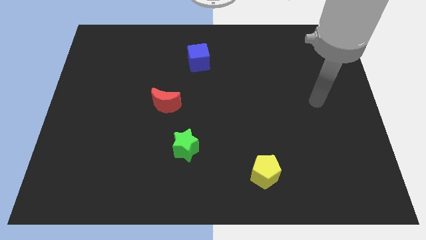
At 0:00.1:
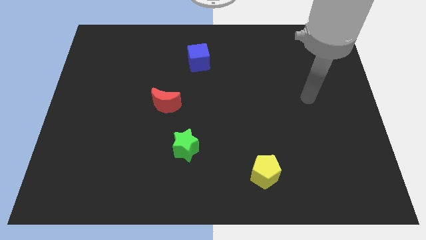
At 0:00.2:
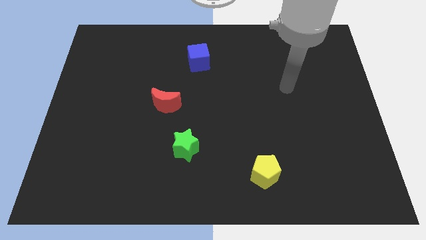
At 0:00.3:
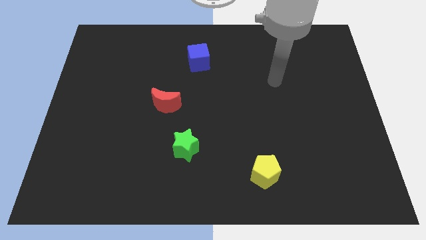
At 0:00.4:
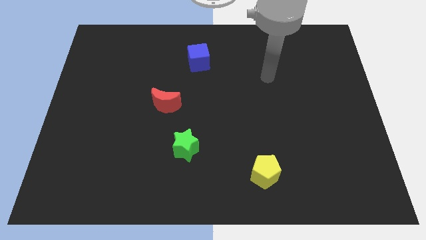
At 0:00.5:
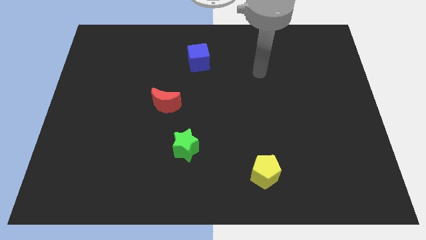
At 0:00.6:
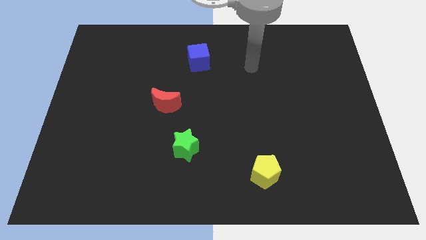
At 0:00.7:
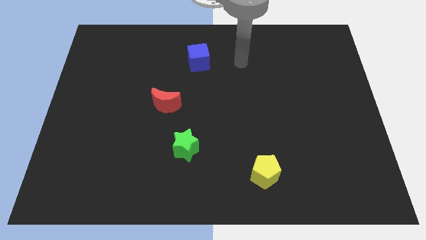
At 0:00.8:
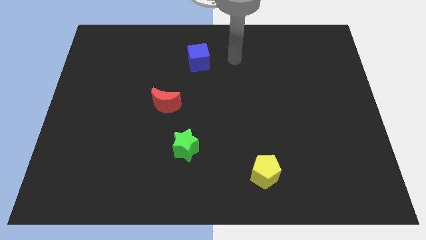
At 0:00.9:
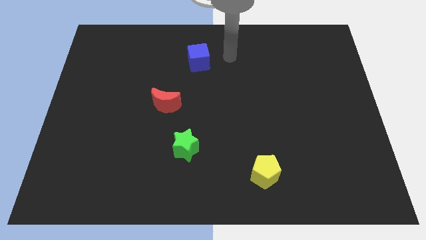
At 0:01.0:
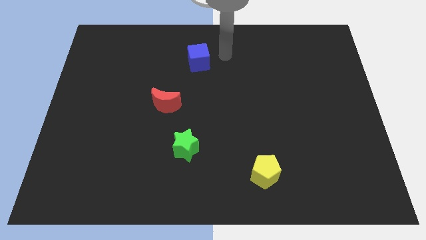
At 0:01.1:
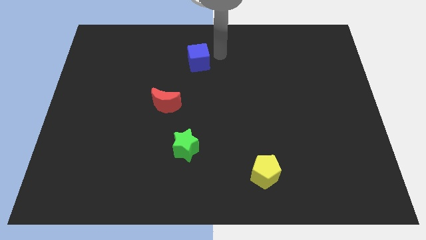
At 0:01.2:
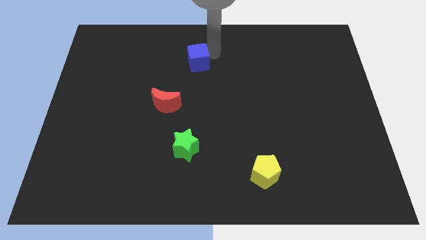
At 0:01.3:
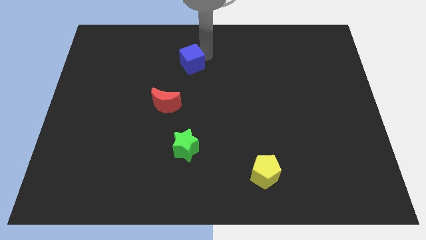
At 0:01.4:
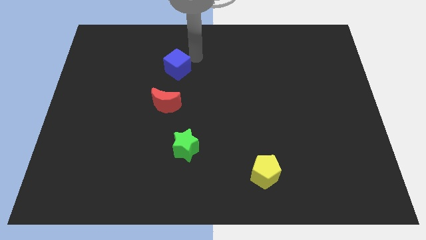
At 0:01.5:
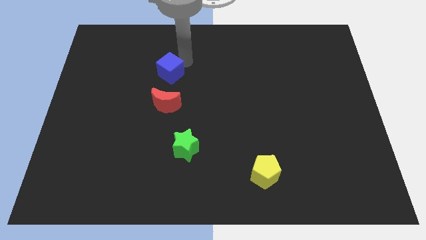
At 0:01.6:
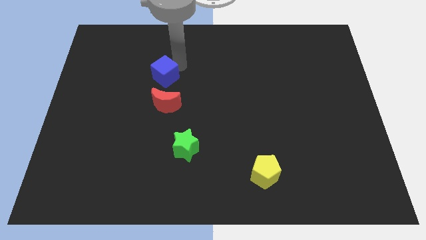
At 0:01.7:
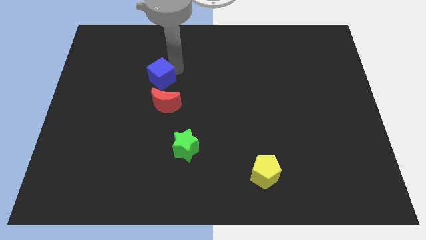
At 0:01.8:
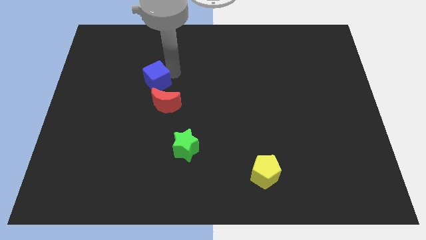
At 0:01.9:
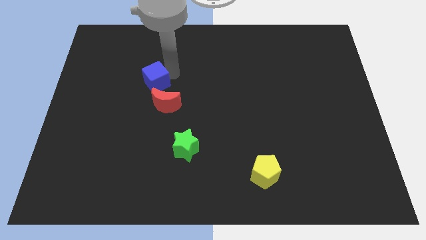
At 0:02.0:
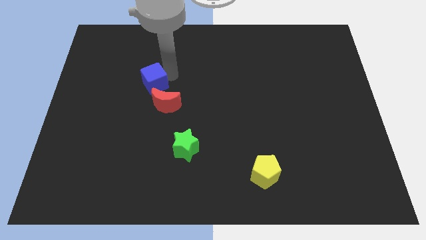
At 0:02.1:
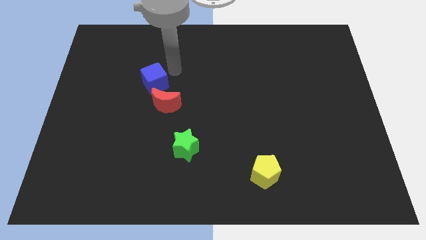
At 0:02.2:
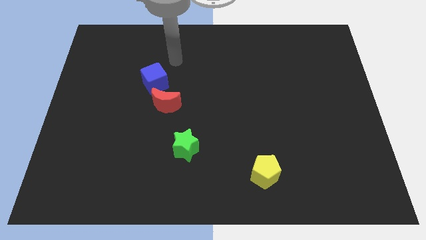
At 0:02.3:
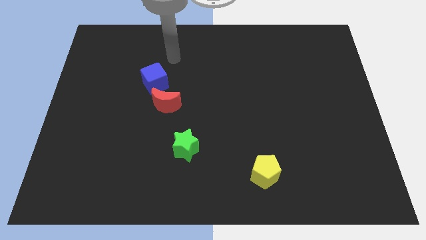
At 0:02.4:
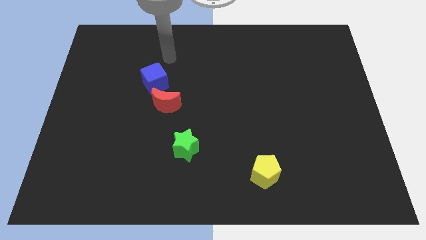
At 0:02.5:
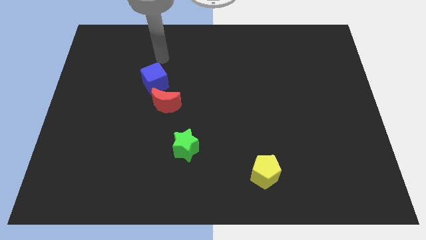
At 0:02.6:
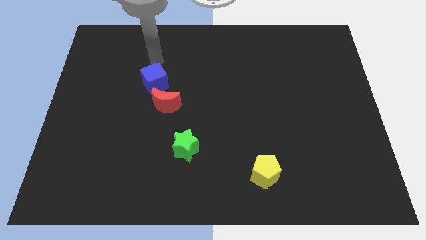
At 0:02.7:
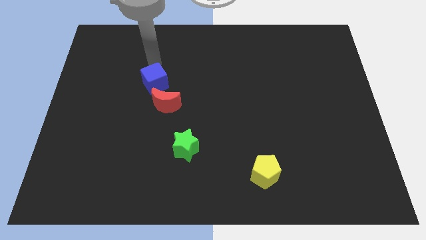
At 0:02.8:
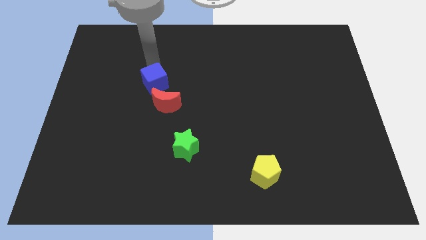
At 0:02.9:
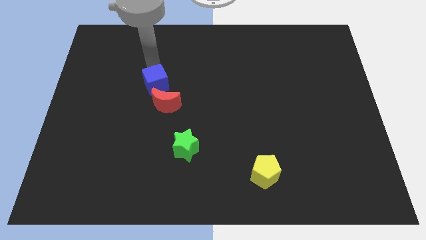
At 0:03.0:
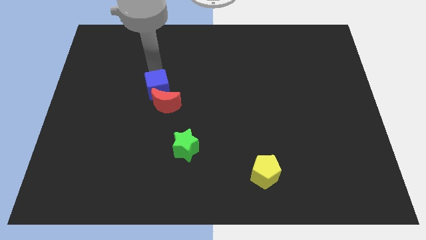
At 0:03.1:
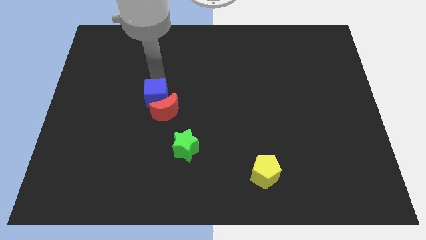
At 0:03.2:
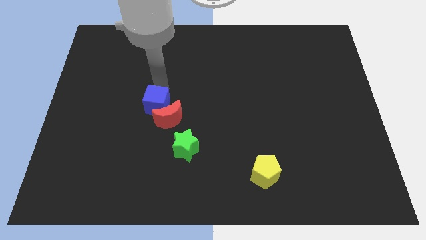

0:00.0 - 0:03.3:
push the cube next to the moon

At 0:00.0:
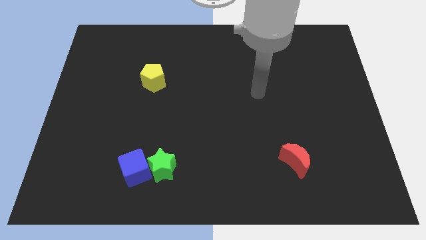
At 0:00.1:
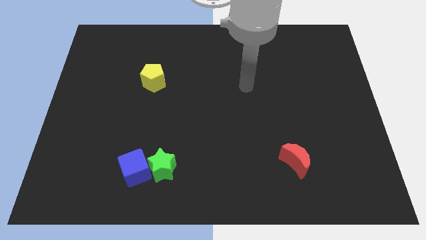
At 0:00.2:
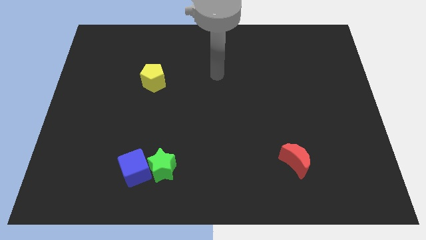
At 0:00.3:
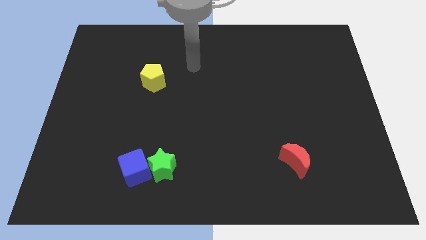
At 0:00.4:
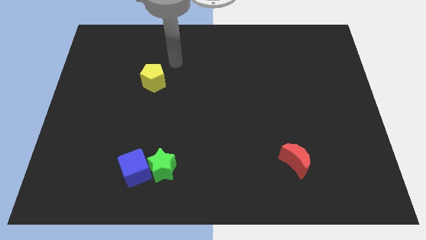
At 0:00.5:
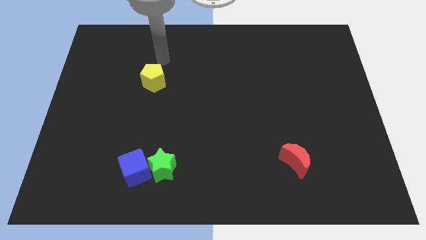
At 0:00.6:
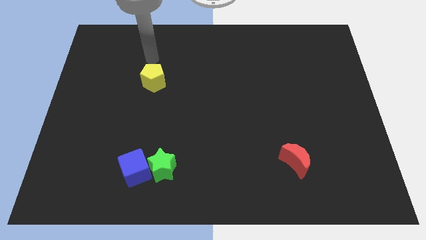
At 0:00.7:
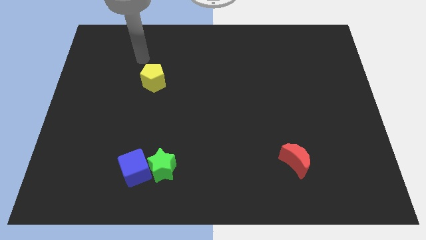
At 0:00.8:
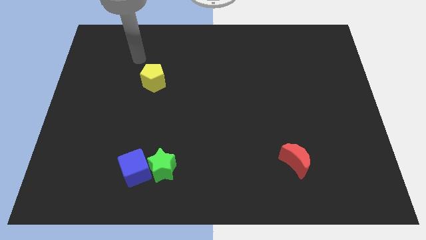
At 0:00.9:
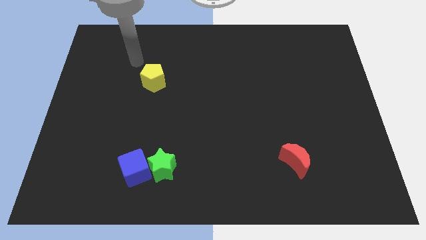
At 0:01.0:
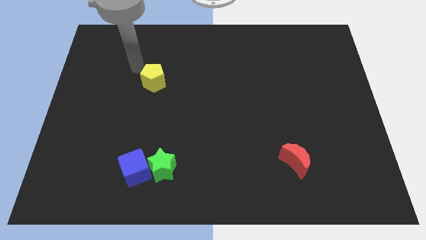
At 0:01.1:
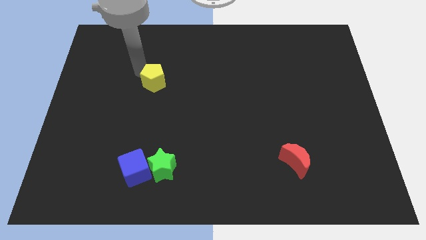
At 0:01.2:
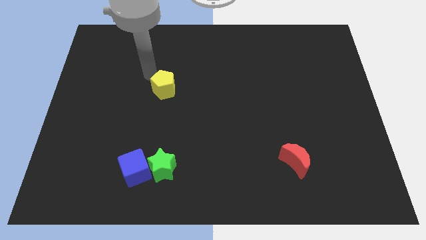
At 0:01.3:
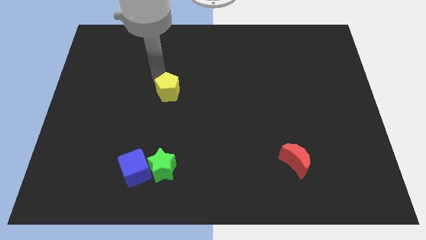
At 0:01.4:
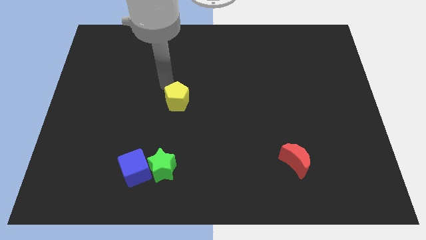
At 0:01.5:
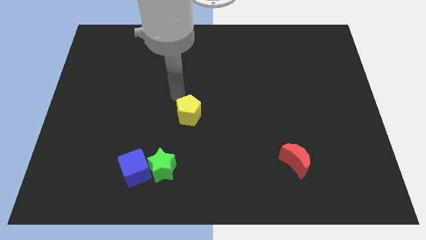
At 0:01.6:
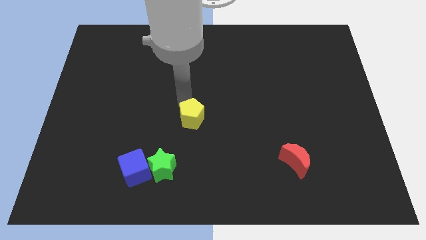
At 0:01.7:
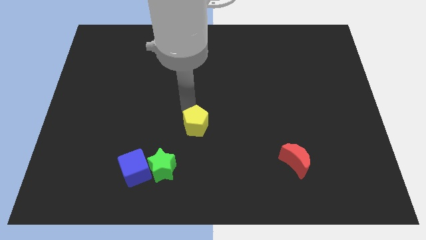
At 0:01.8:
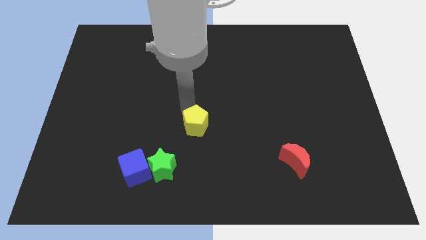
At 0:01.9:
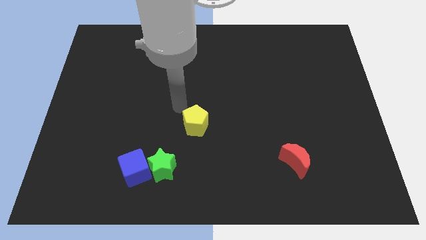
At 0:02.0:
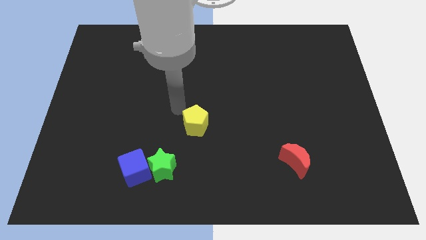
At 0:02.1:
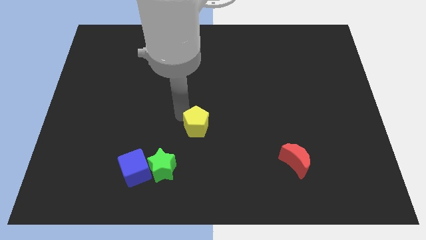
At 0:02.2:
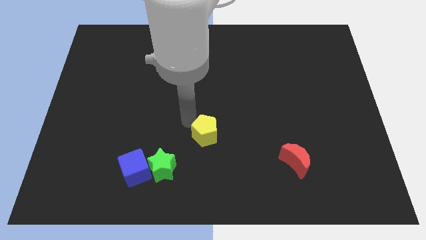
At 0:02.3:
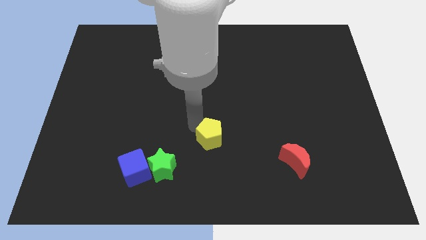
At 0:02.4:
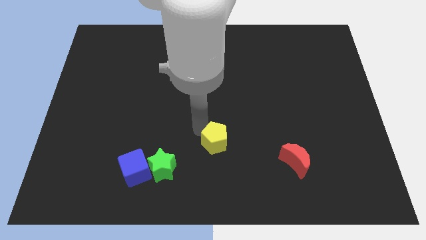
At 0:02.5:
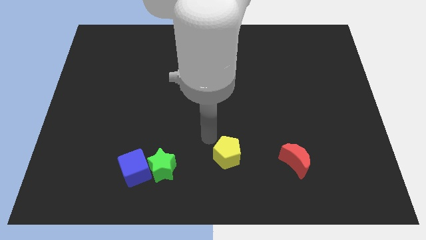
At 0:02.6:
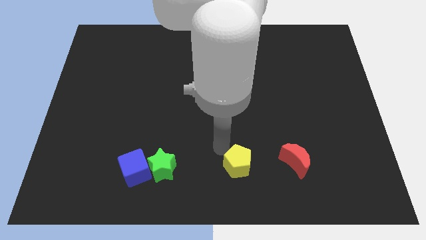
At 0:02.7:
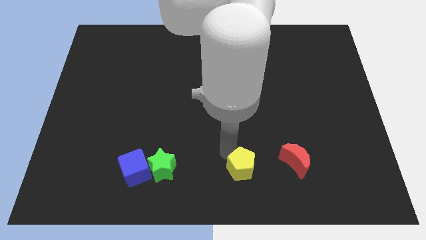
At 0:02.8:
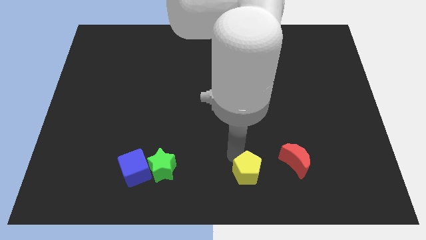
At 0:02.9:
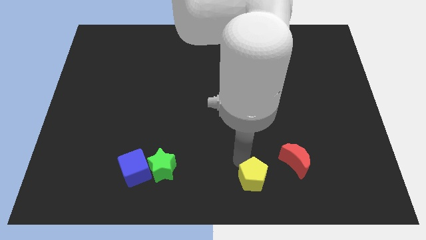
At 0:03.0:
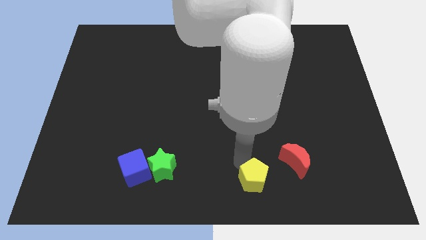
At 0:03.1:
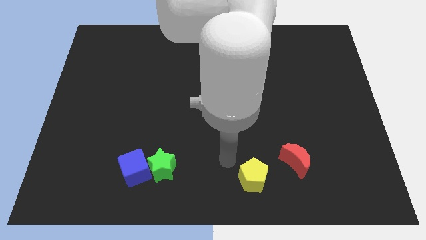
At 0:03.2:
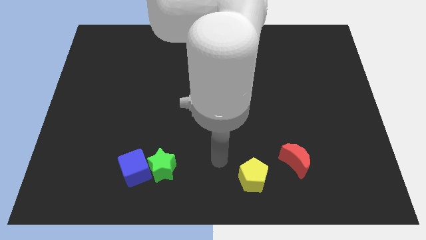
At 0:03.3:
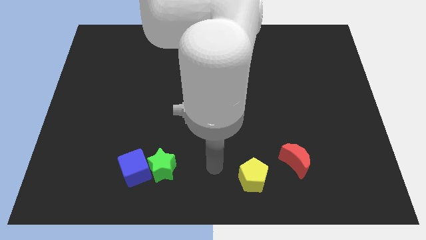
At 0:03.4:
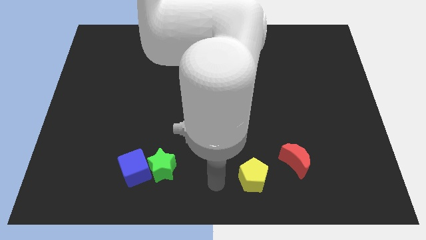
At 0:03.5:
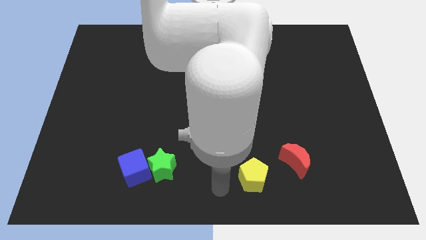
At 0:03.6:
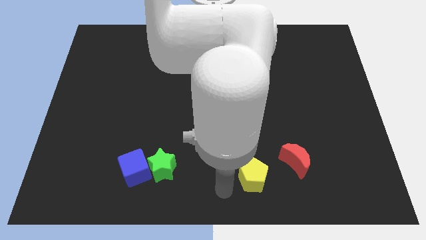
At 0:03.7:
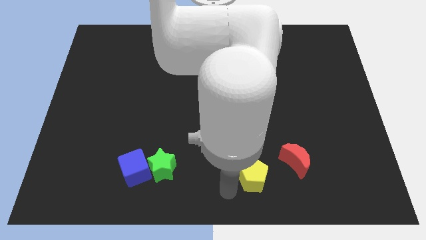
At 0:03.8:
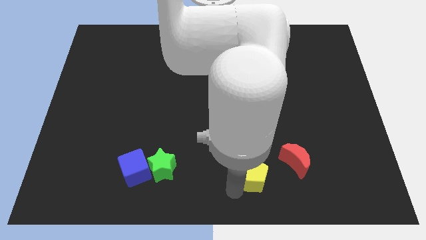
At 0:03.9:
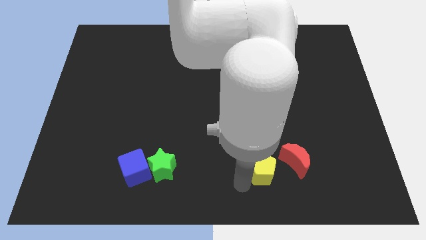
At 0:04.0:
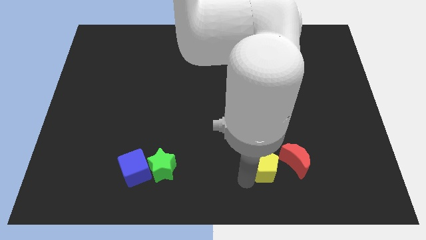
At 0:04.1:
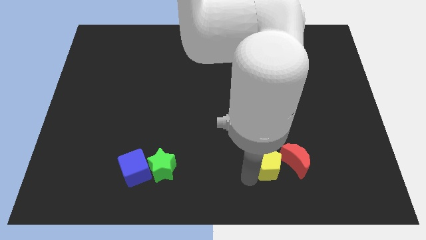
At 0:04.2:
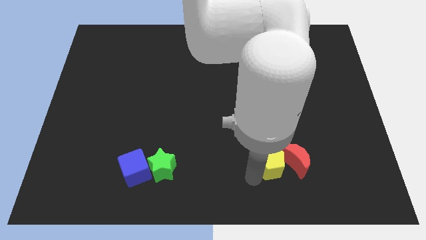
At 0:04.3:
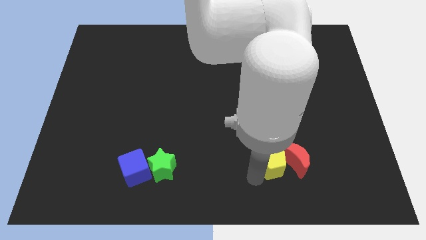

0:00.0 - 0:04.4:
put the yellow pentagon towards the red moon

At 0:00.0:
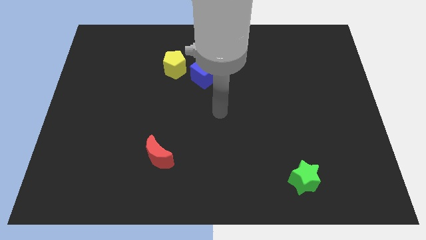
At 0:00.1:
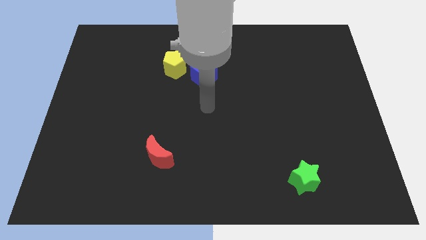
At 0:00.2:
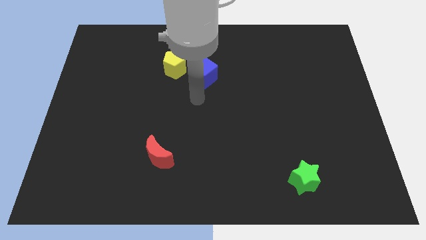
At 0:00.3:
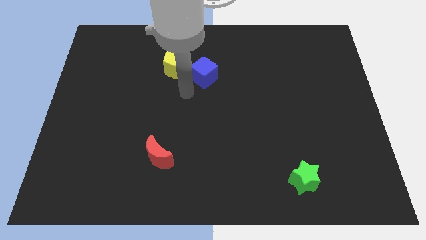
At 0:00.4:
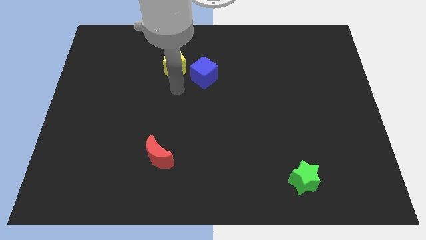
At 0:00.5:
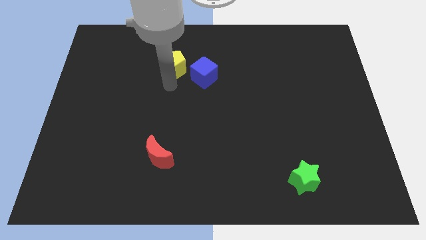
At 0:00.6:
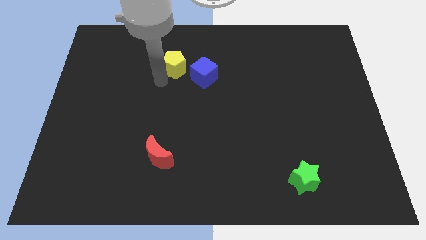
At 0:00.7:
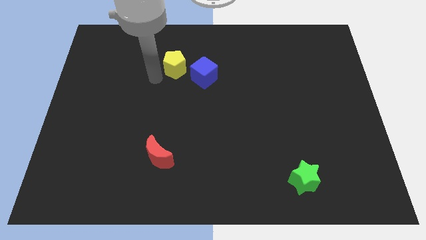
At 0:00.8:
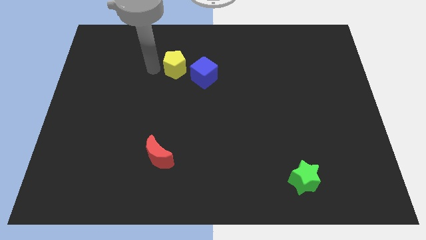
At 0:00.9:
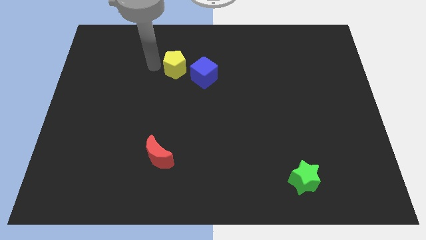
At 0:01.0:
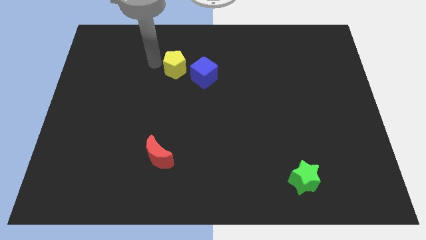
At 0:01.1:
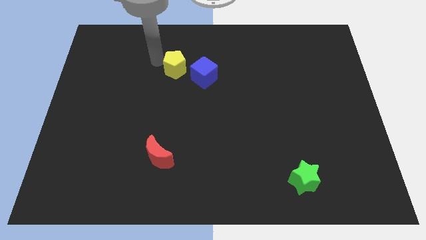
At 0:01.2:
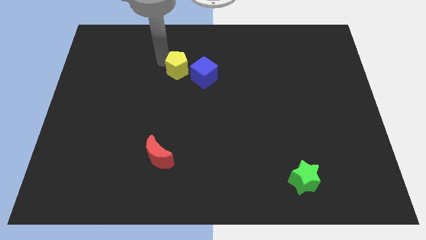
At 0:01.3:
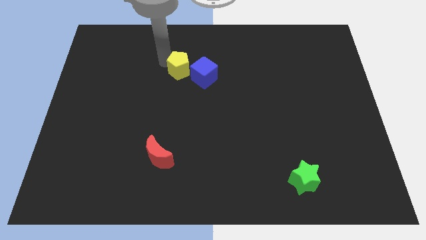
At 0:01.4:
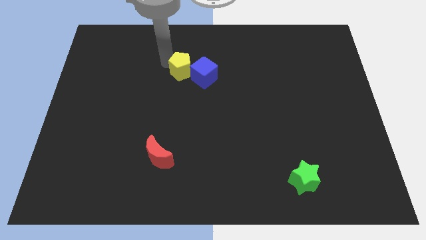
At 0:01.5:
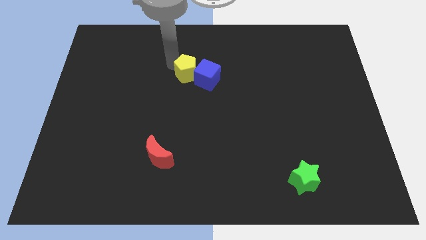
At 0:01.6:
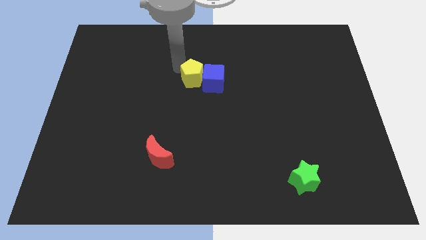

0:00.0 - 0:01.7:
put the yellow block to the blue cube
